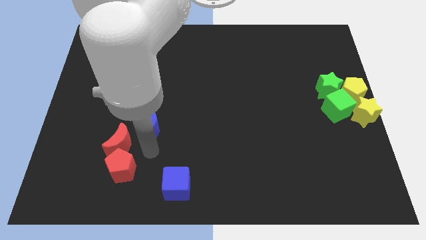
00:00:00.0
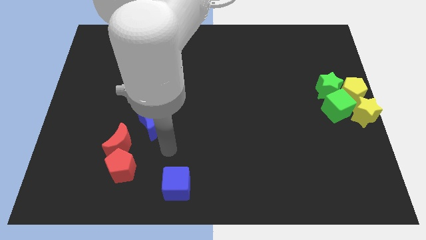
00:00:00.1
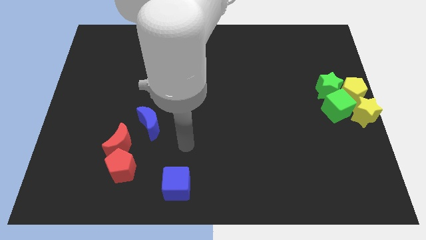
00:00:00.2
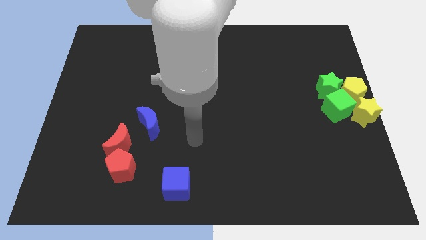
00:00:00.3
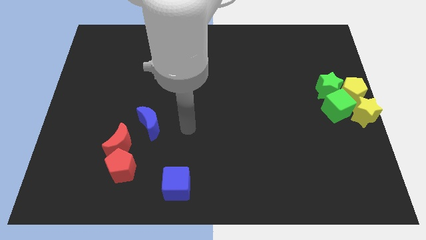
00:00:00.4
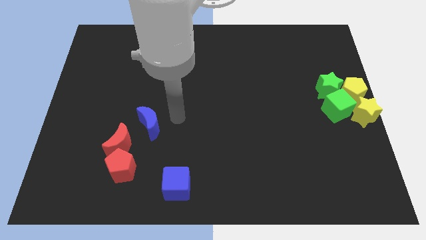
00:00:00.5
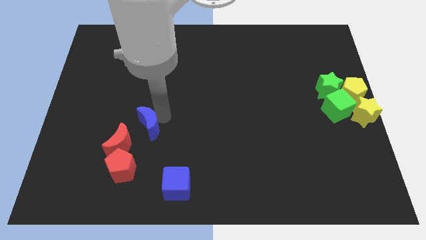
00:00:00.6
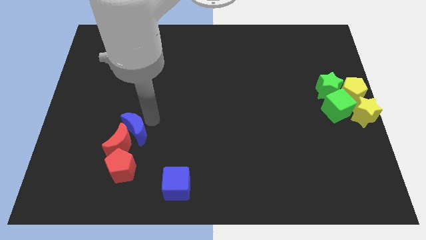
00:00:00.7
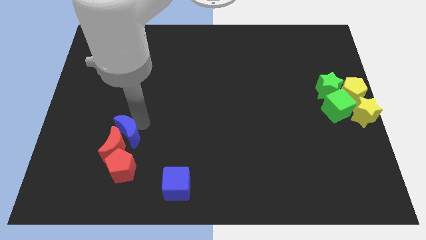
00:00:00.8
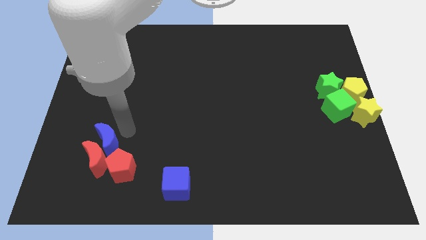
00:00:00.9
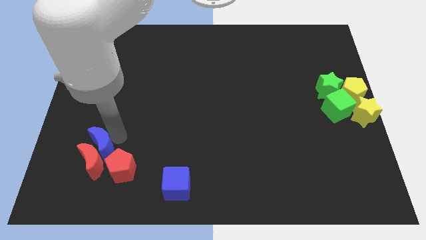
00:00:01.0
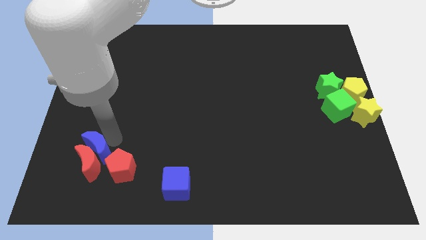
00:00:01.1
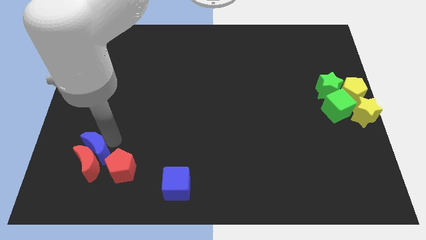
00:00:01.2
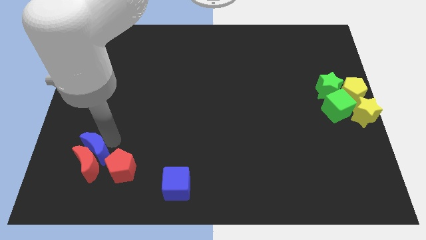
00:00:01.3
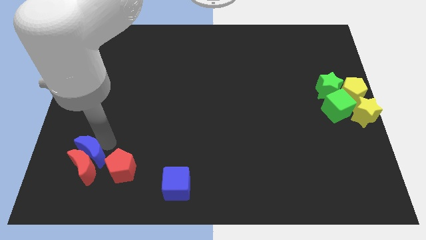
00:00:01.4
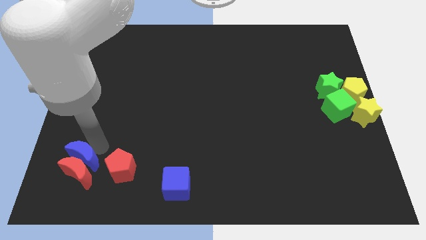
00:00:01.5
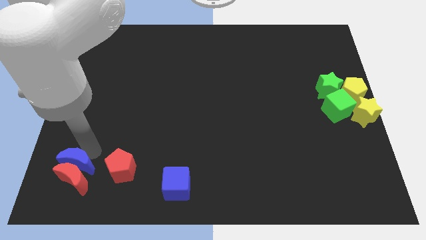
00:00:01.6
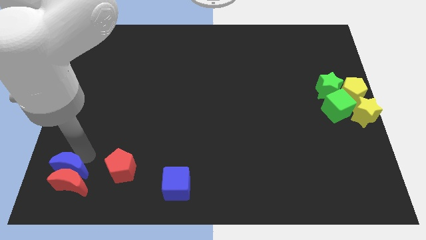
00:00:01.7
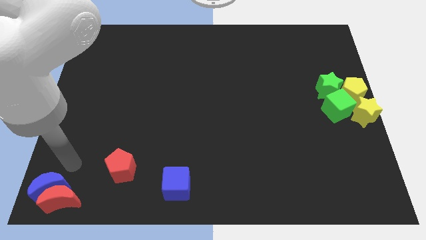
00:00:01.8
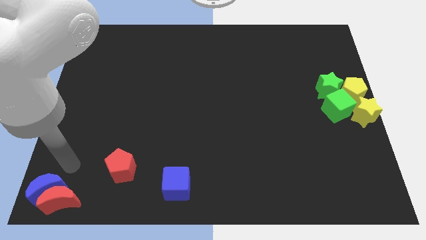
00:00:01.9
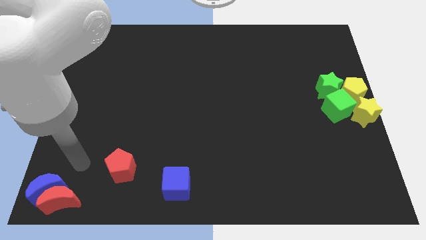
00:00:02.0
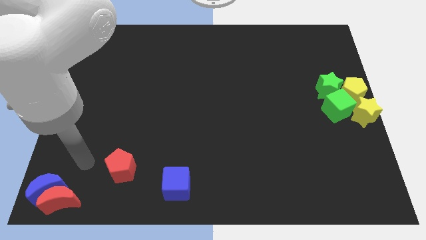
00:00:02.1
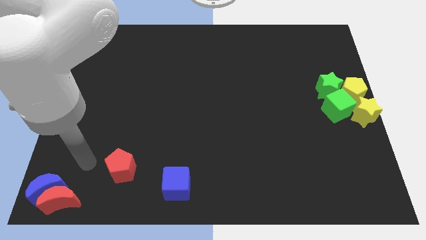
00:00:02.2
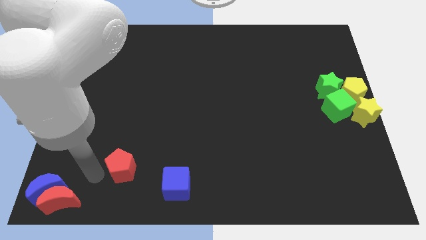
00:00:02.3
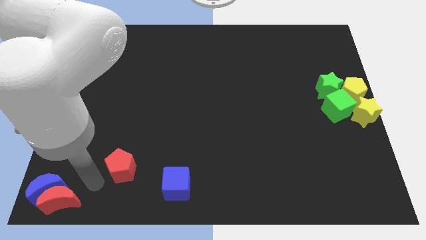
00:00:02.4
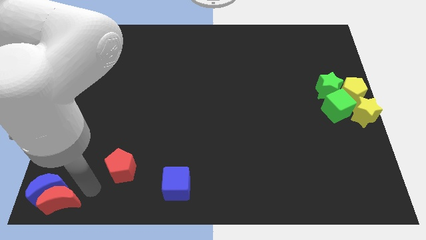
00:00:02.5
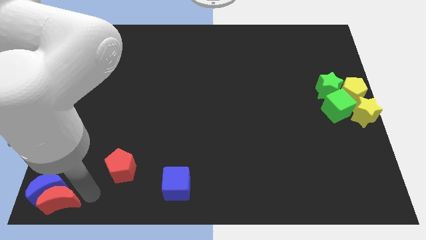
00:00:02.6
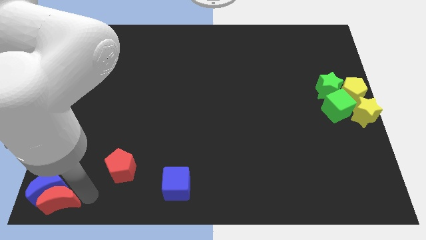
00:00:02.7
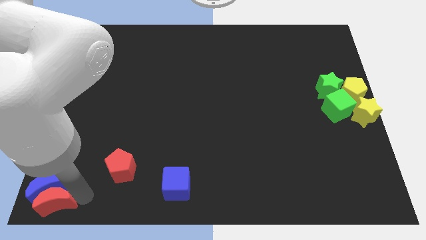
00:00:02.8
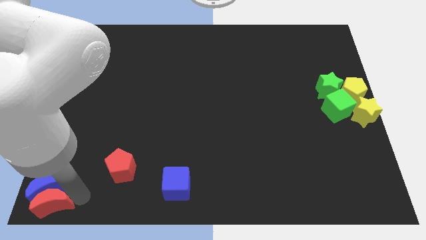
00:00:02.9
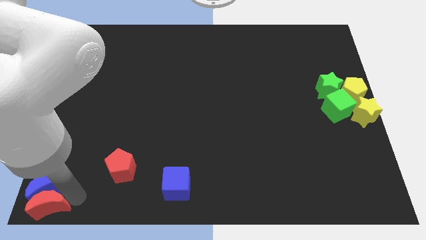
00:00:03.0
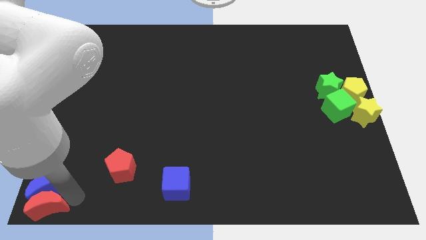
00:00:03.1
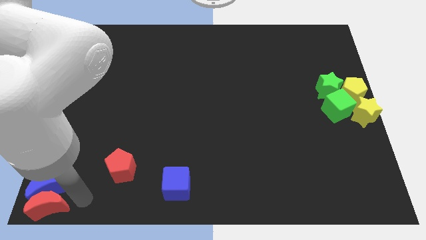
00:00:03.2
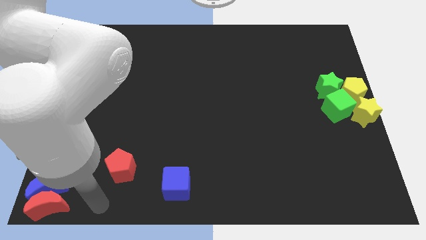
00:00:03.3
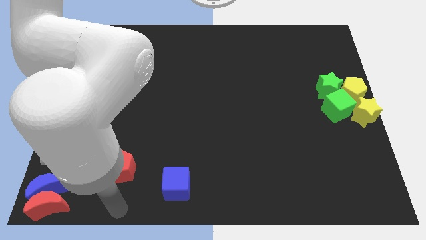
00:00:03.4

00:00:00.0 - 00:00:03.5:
push the blue crescent along with red crescent to the bottom left corner of the board

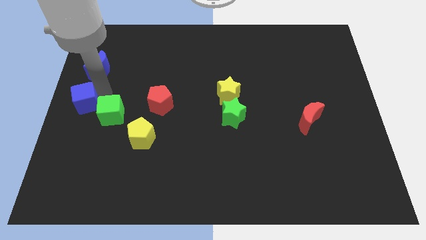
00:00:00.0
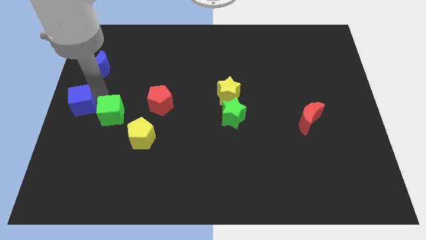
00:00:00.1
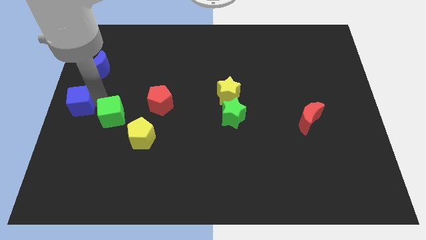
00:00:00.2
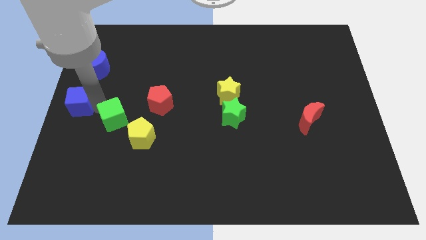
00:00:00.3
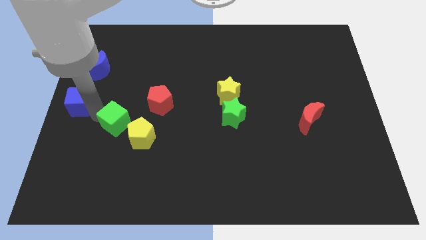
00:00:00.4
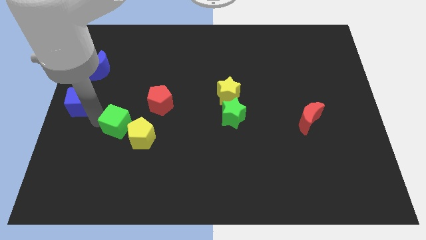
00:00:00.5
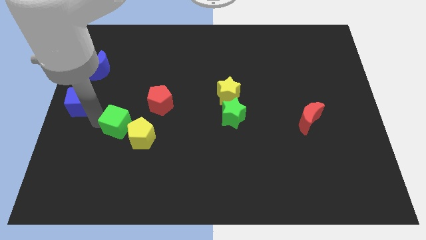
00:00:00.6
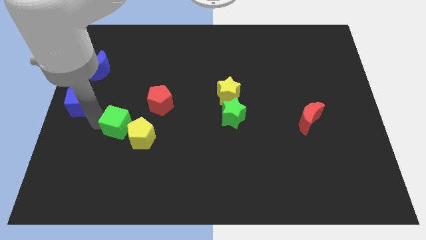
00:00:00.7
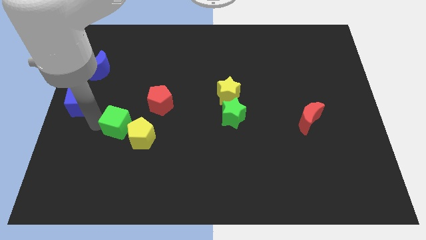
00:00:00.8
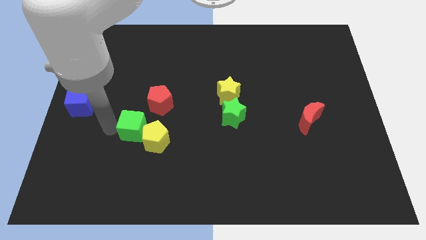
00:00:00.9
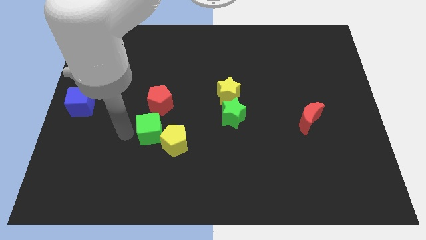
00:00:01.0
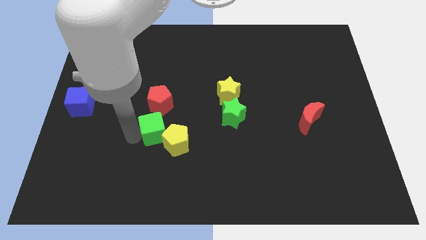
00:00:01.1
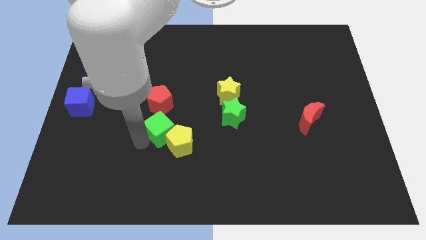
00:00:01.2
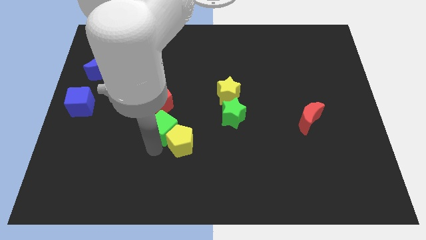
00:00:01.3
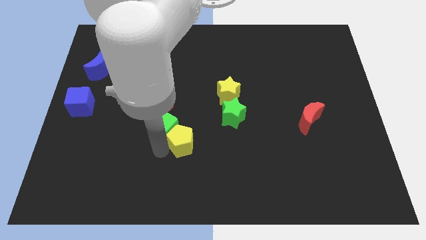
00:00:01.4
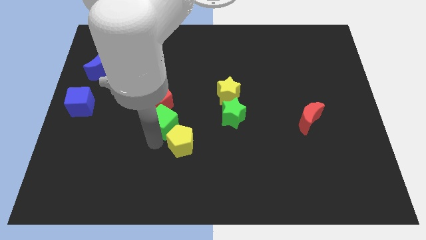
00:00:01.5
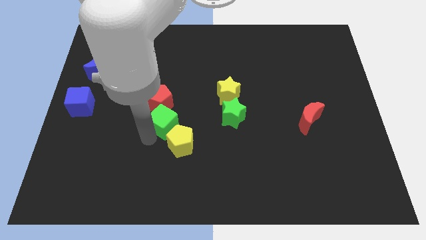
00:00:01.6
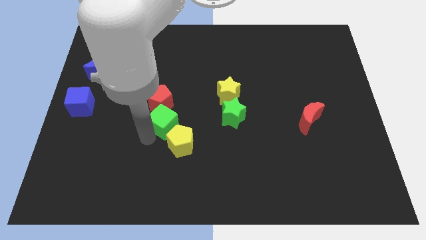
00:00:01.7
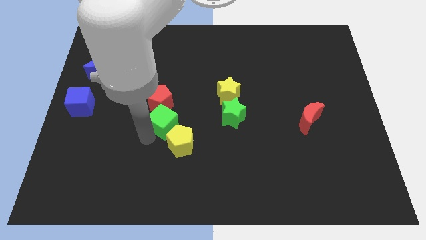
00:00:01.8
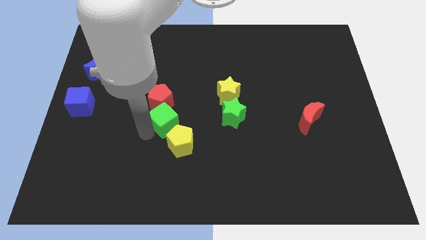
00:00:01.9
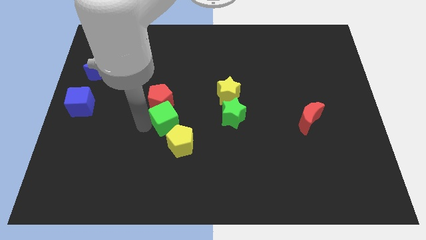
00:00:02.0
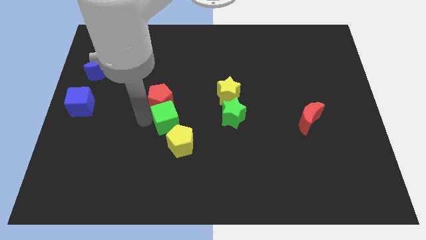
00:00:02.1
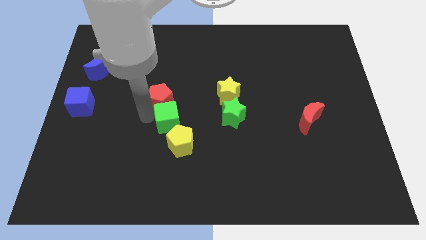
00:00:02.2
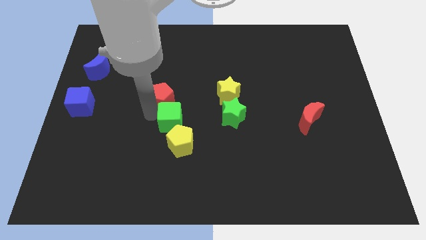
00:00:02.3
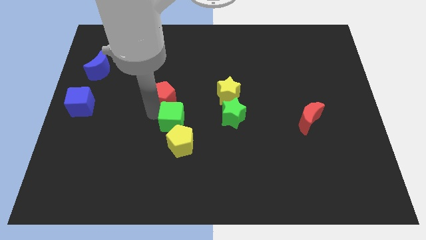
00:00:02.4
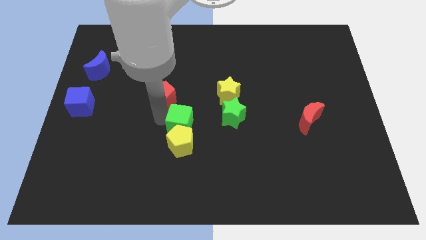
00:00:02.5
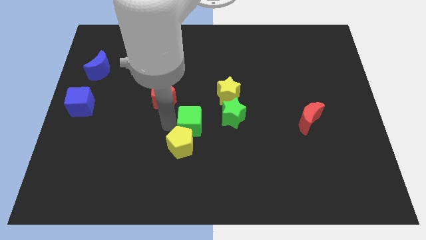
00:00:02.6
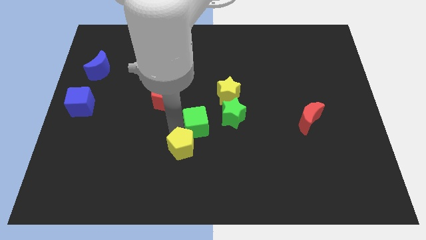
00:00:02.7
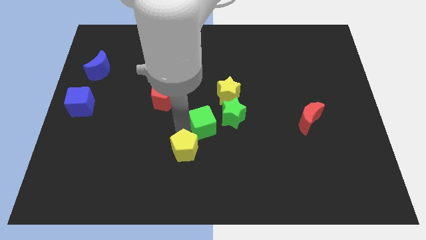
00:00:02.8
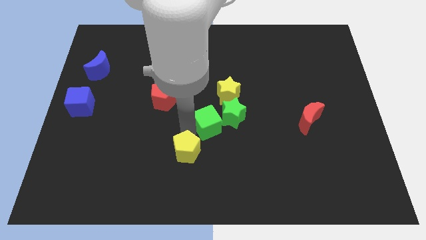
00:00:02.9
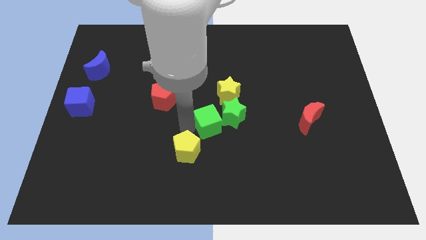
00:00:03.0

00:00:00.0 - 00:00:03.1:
move the green cube to the left of the green star

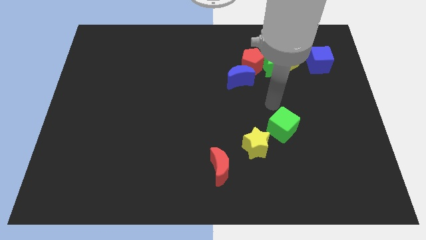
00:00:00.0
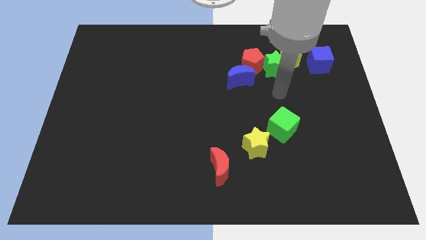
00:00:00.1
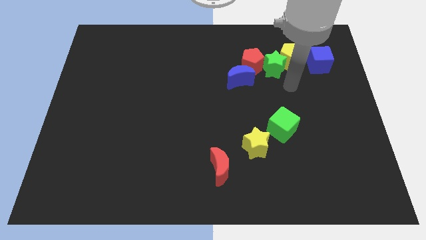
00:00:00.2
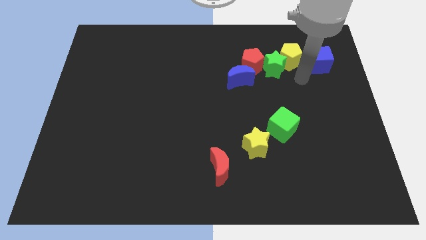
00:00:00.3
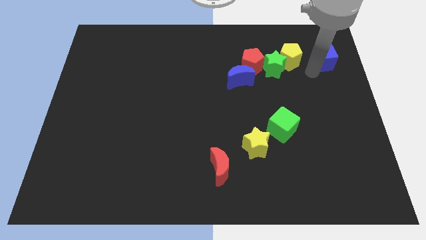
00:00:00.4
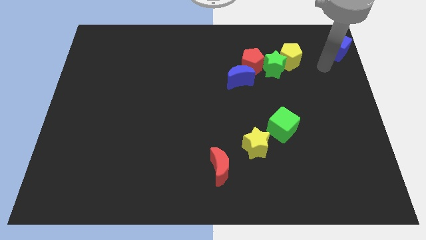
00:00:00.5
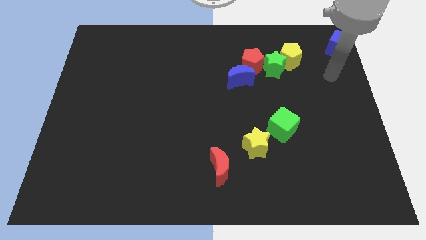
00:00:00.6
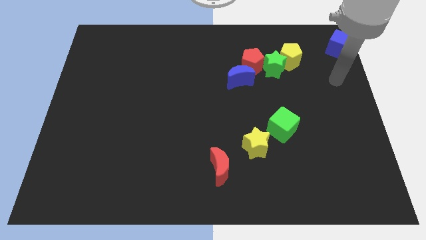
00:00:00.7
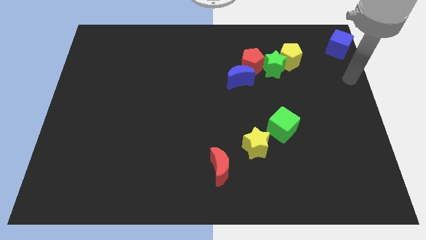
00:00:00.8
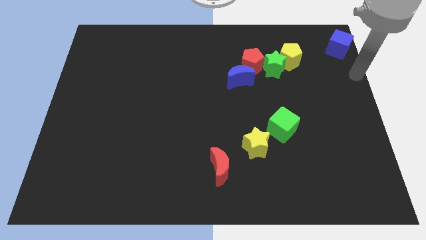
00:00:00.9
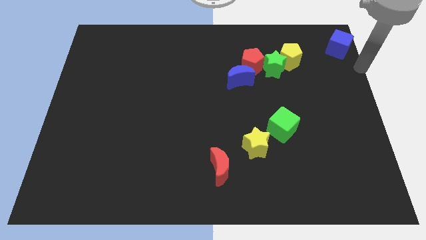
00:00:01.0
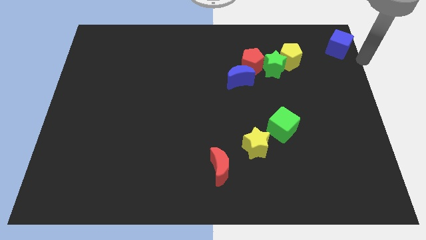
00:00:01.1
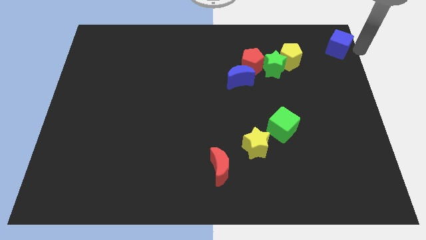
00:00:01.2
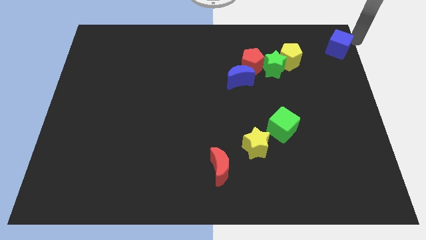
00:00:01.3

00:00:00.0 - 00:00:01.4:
push the blue cube to the top right corner of the board

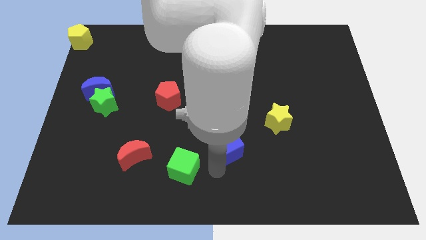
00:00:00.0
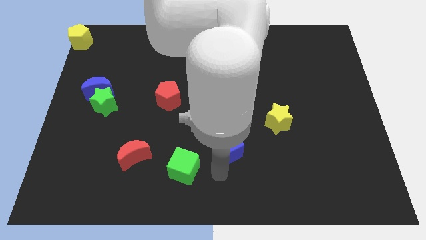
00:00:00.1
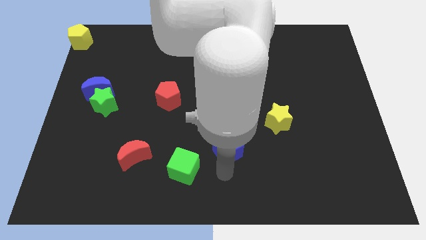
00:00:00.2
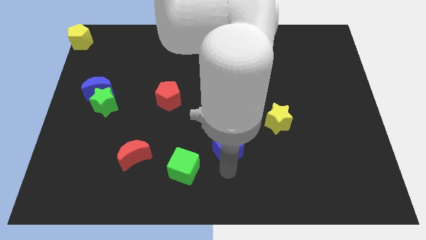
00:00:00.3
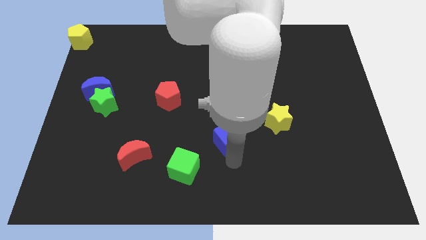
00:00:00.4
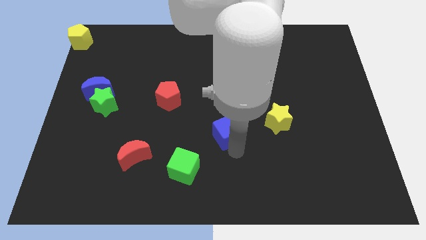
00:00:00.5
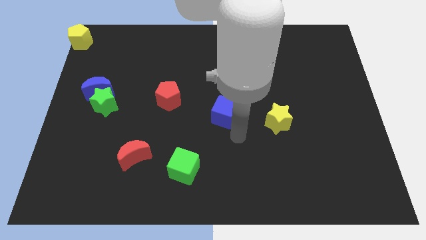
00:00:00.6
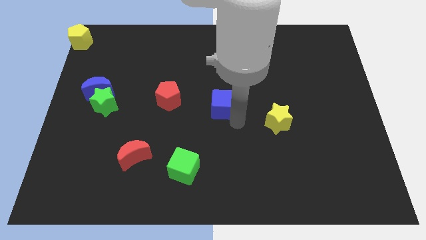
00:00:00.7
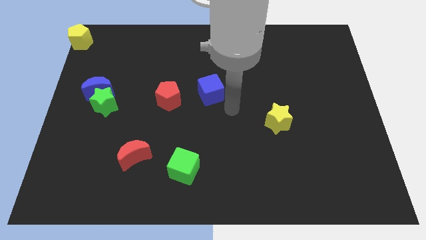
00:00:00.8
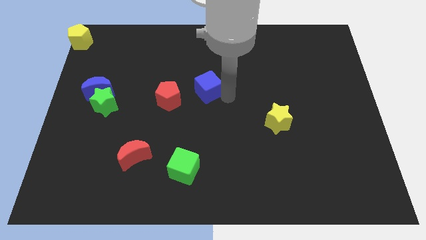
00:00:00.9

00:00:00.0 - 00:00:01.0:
move the blue cube to the center of the board
